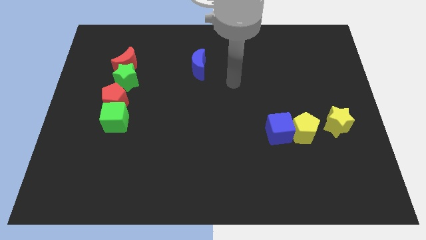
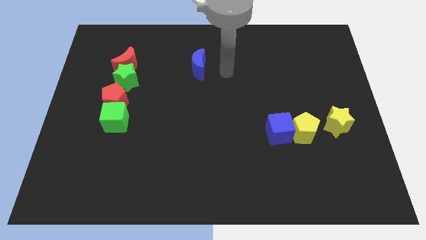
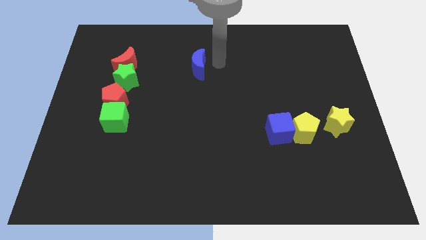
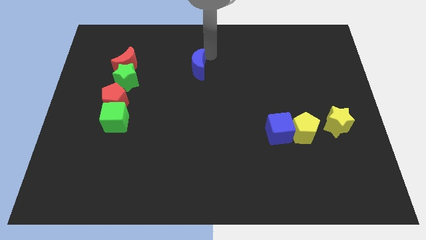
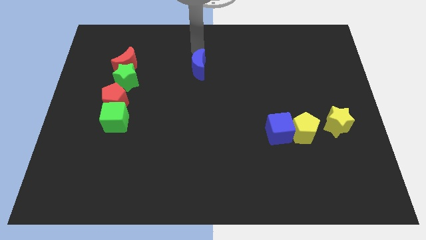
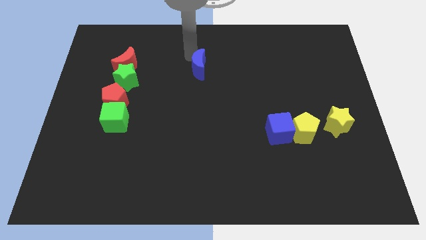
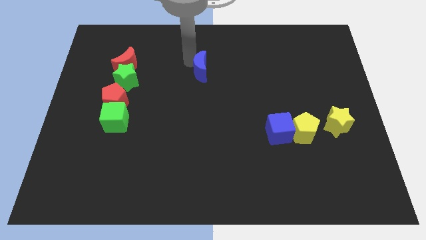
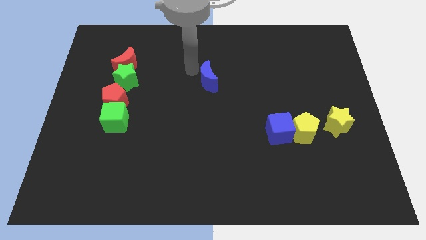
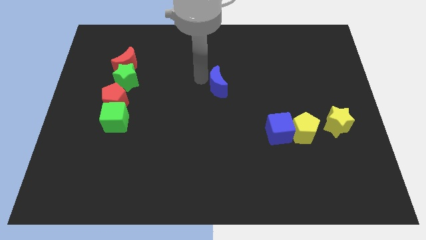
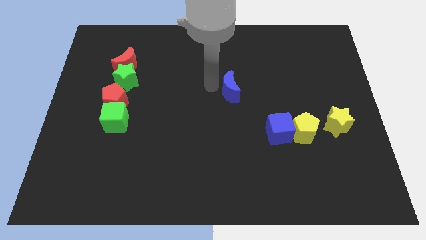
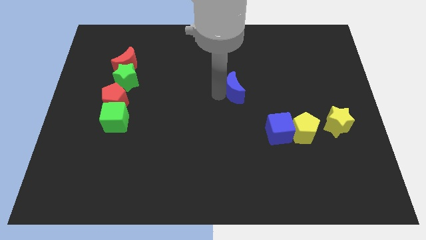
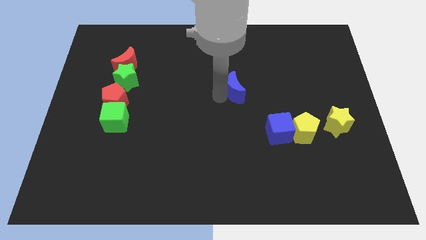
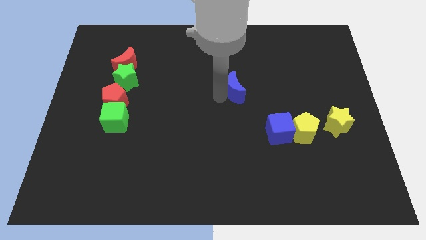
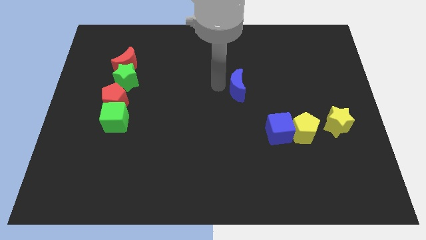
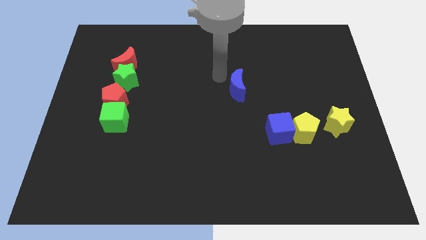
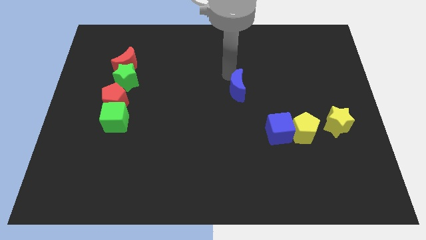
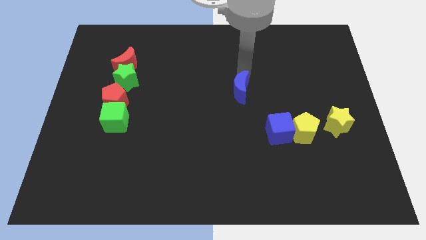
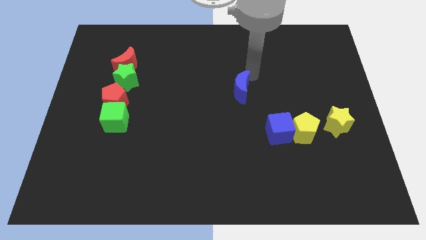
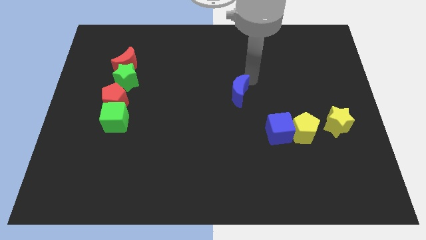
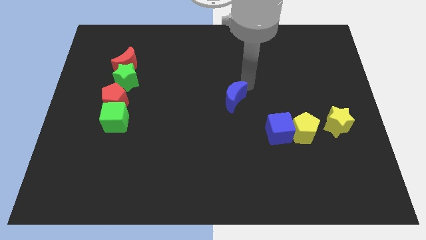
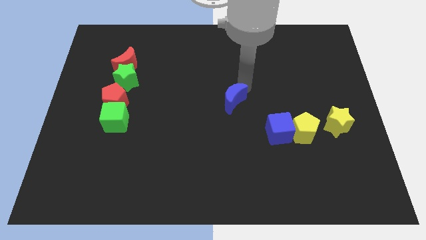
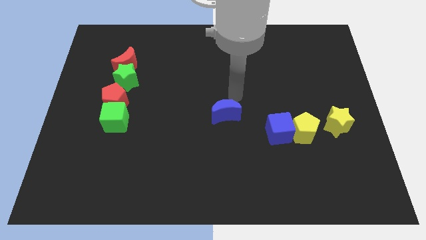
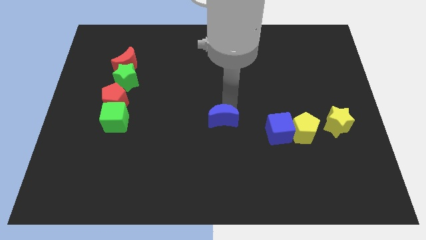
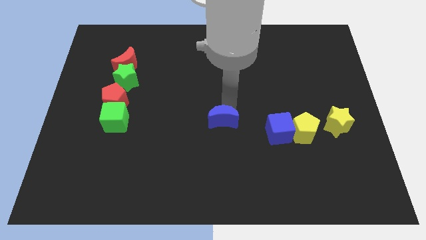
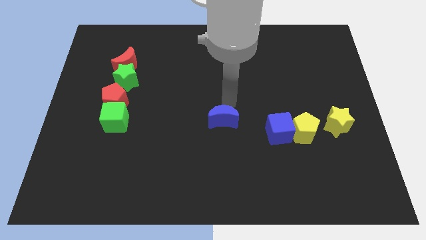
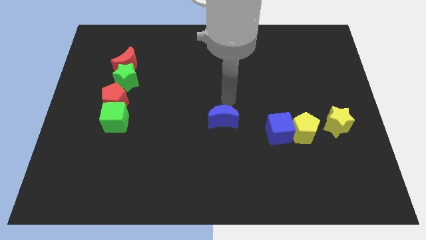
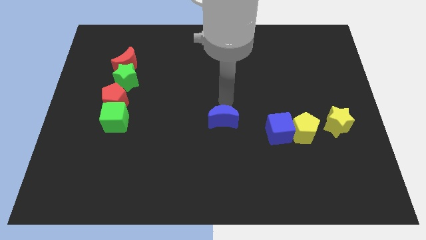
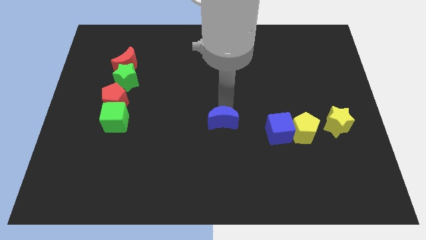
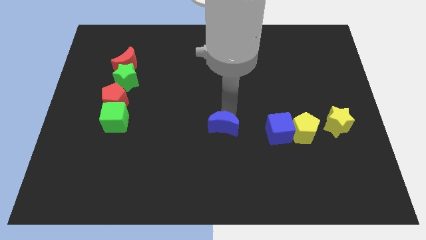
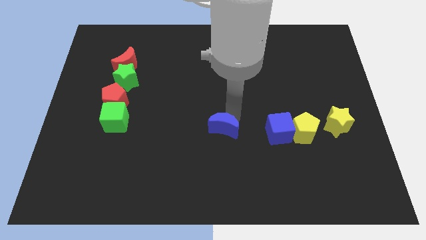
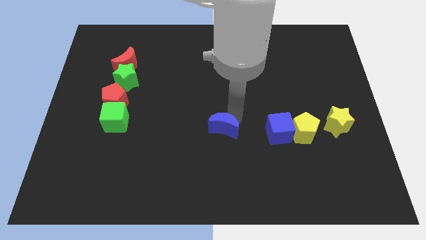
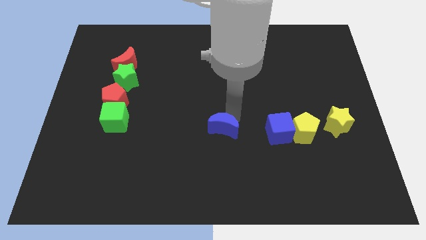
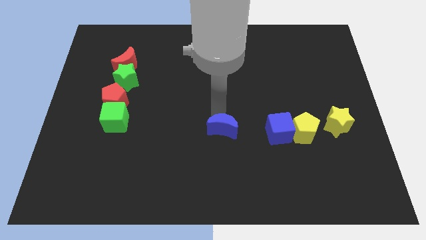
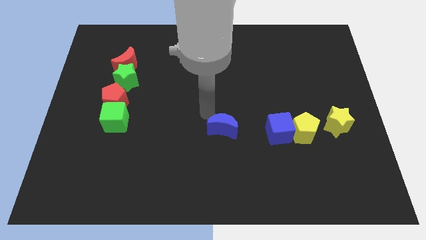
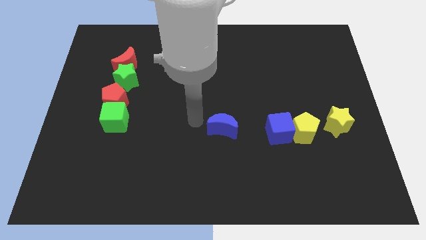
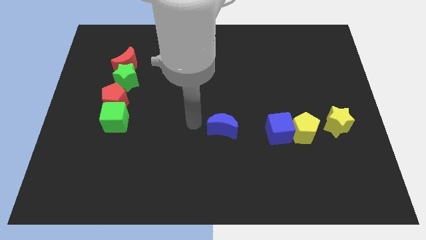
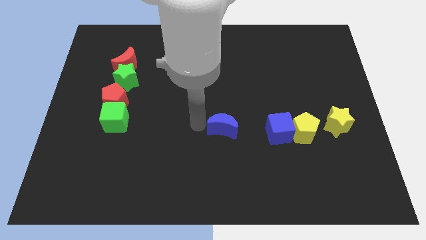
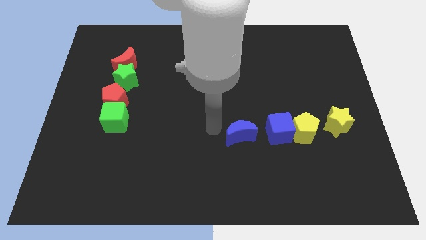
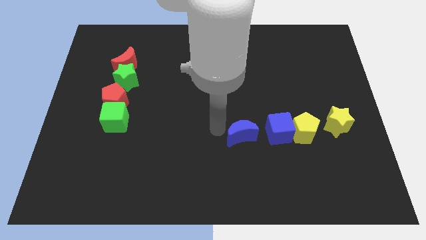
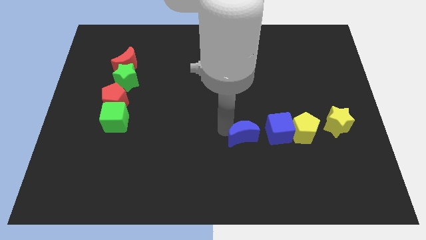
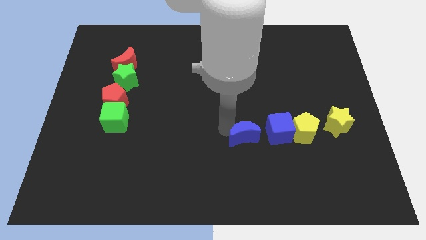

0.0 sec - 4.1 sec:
push the blue moon to the left of the blue cube

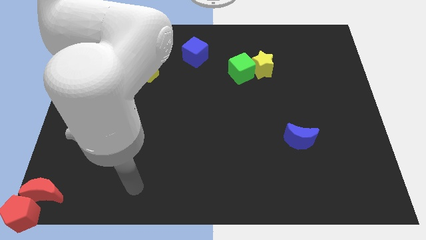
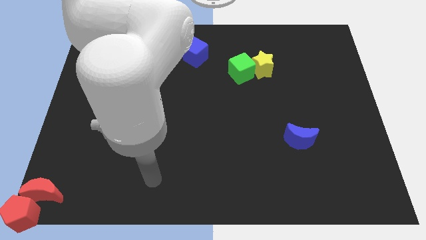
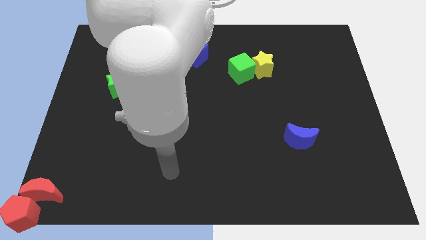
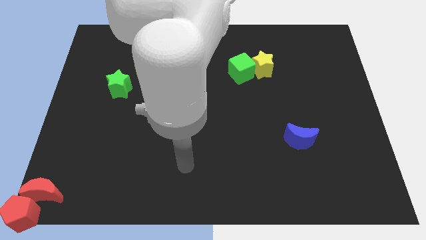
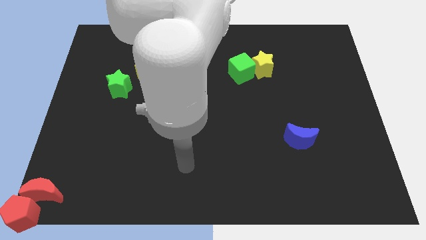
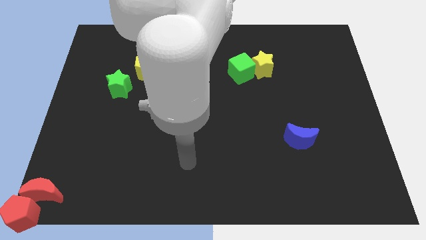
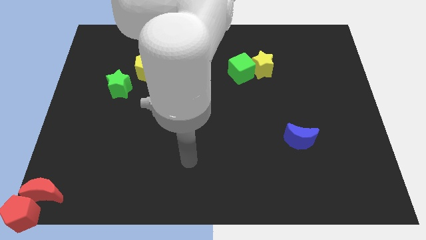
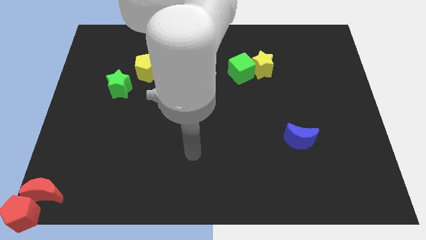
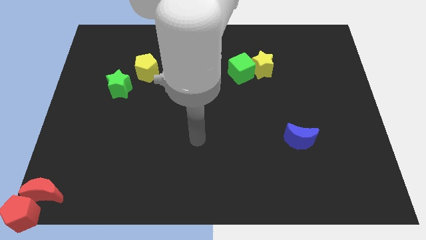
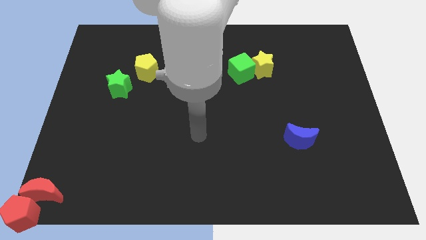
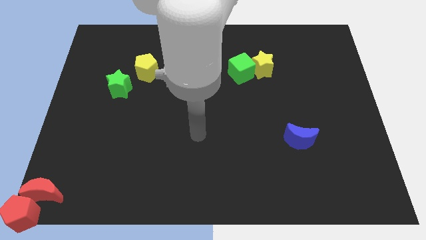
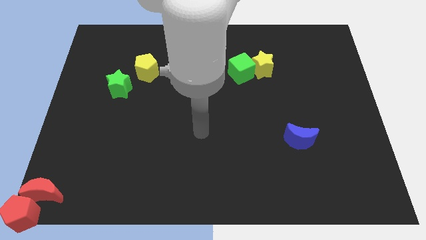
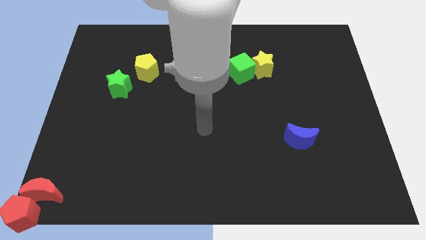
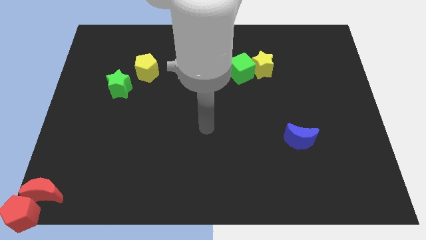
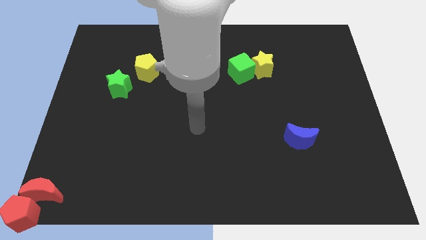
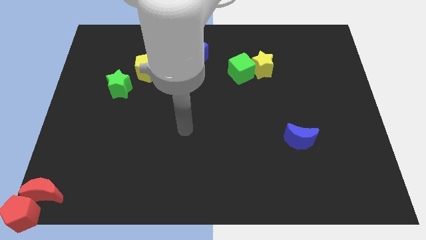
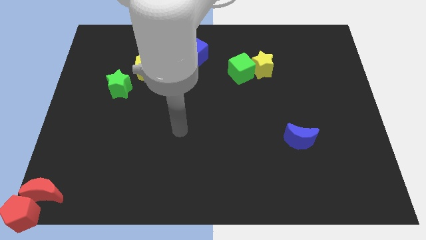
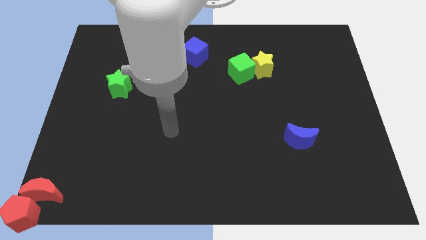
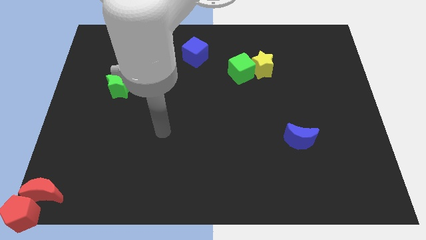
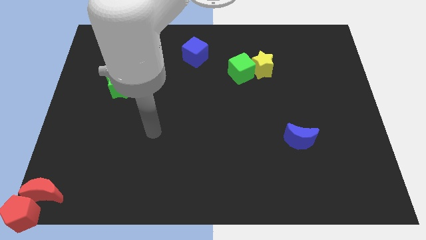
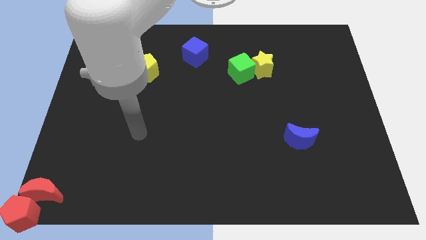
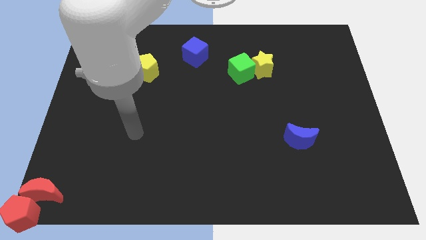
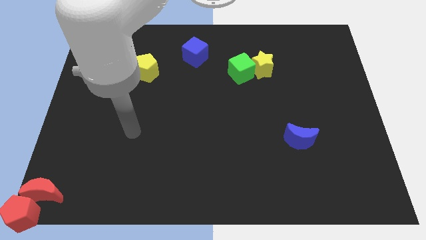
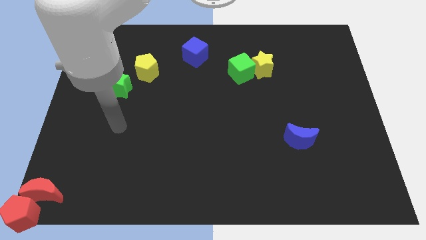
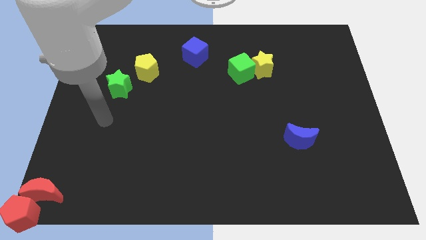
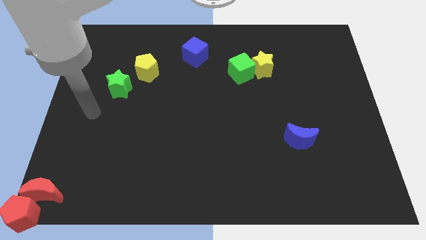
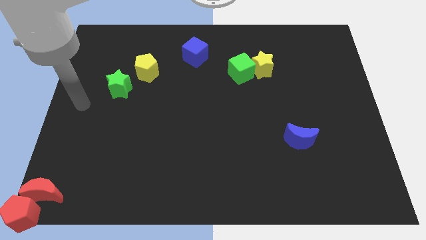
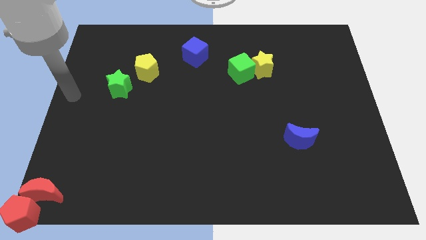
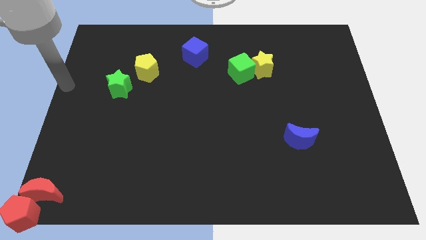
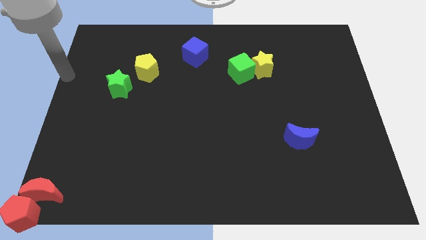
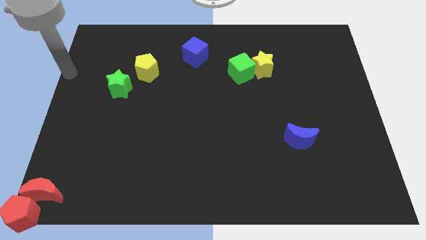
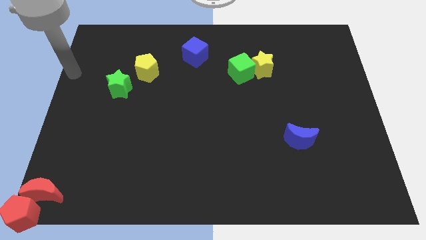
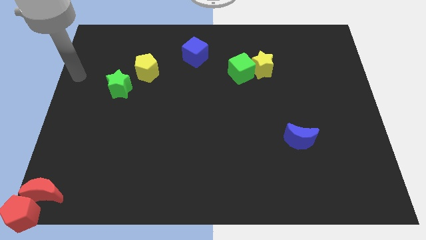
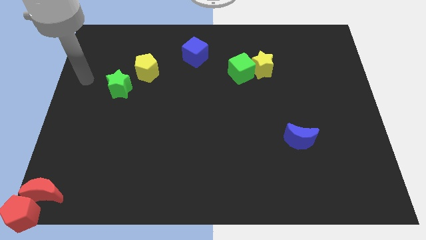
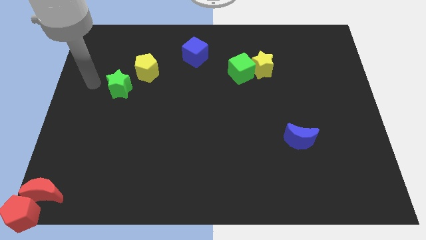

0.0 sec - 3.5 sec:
move your arm left to the green star

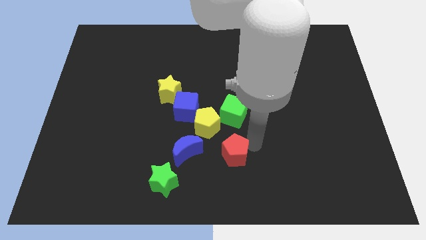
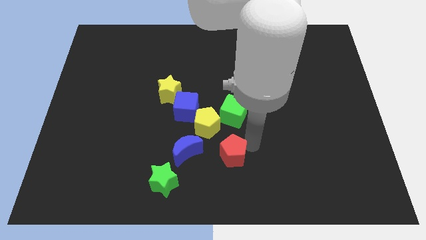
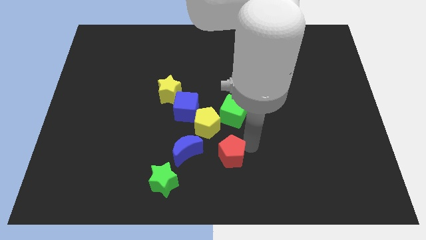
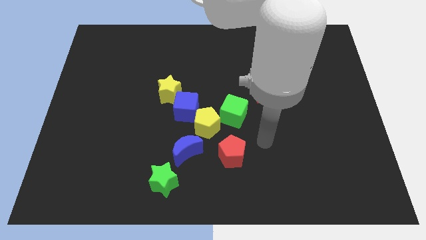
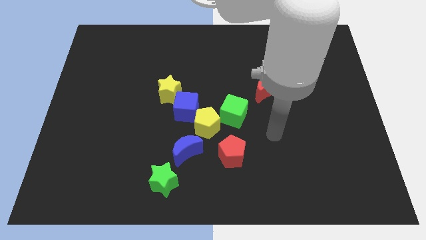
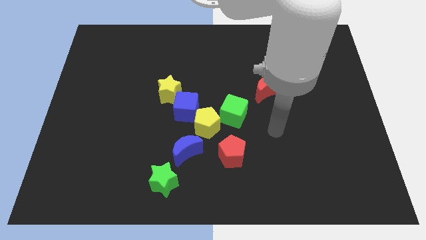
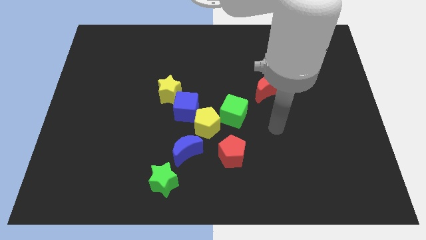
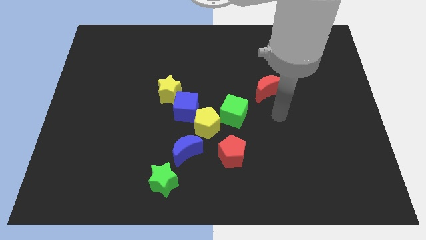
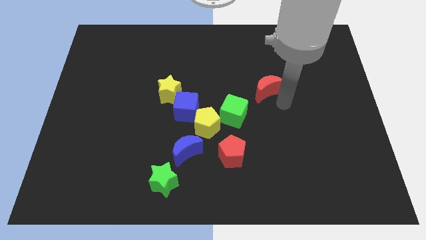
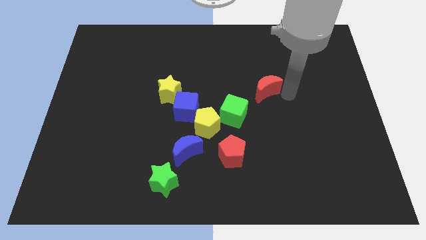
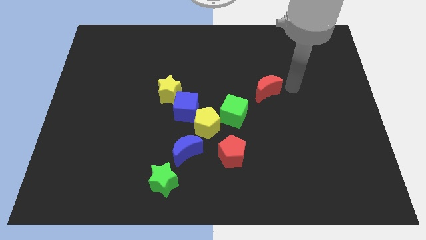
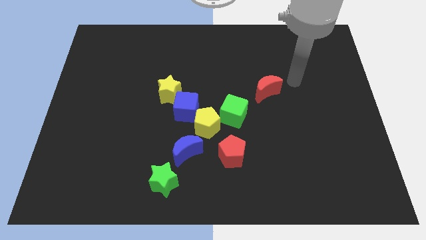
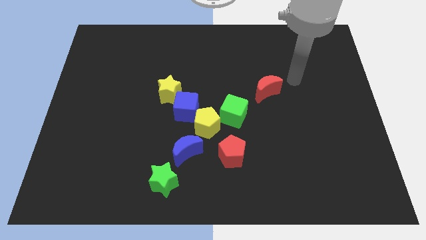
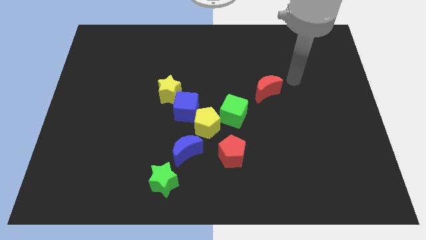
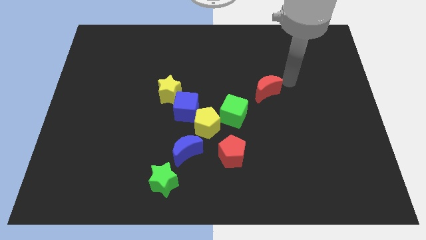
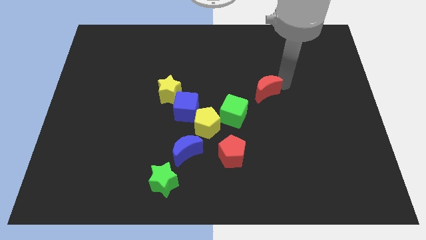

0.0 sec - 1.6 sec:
move your arm away from the red pentagon
